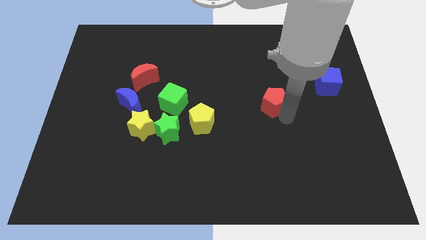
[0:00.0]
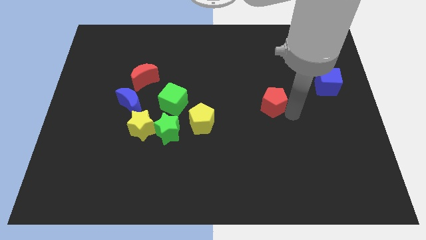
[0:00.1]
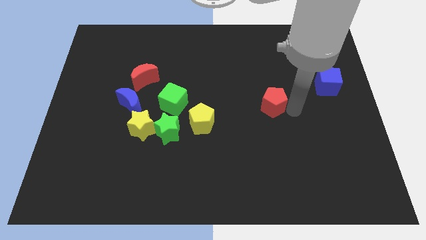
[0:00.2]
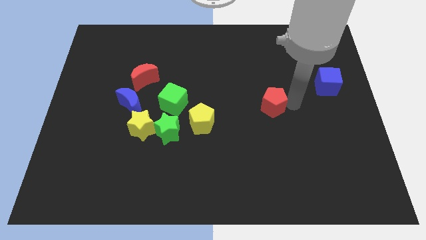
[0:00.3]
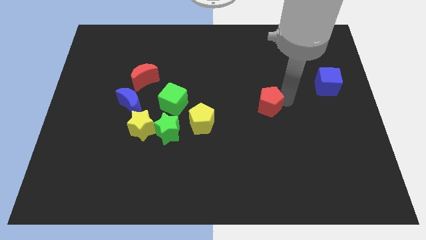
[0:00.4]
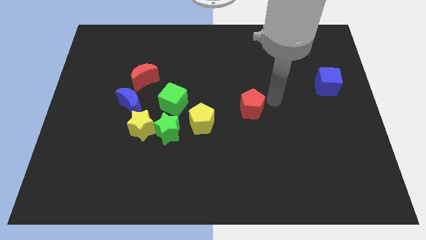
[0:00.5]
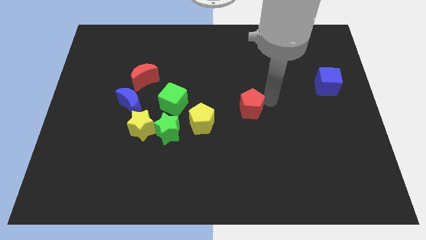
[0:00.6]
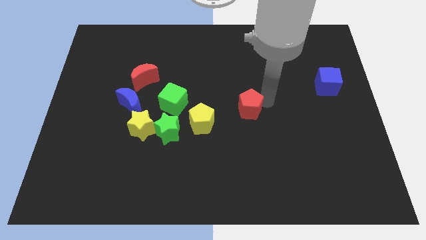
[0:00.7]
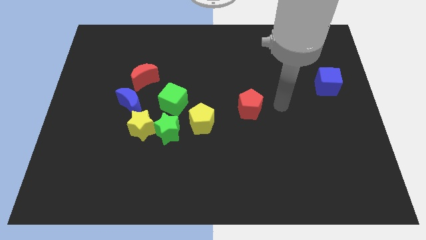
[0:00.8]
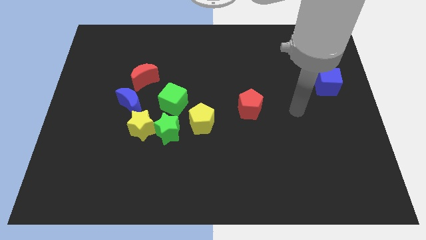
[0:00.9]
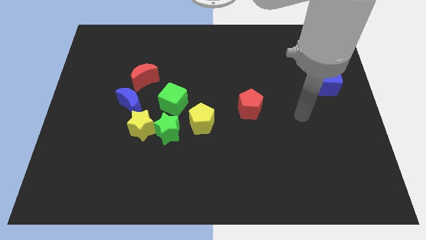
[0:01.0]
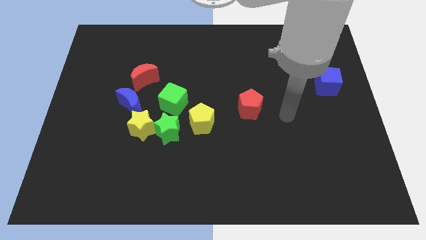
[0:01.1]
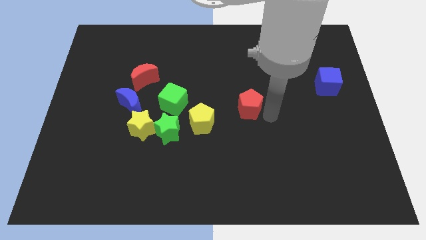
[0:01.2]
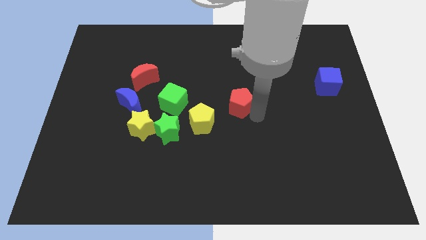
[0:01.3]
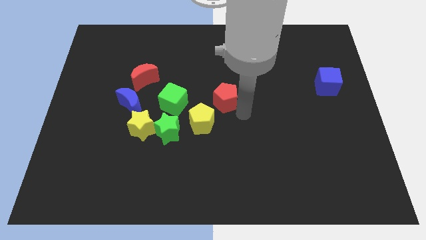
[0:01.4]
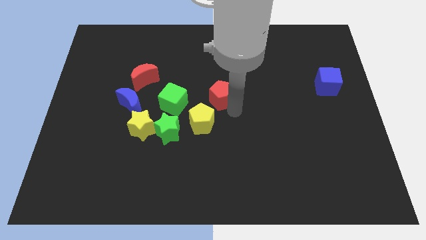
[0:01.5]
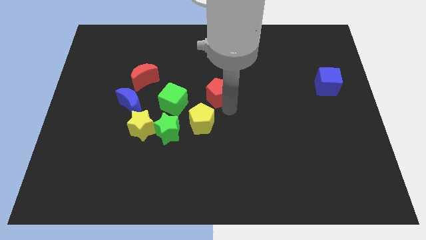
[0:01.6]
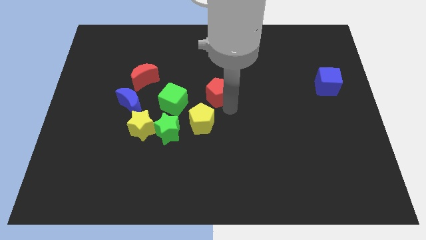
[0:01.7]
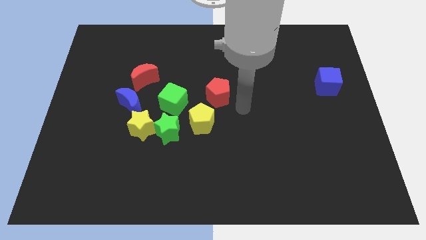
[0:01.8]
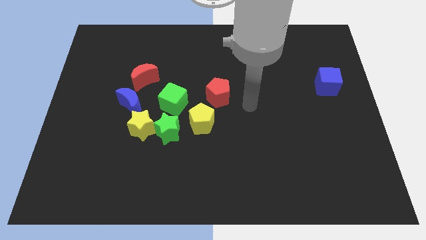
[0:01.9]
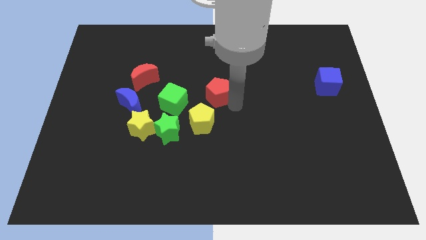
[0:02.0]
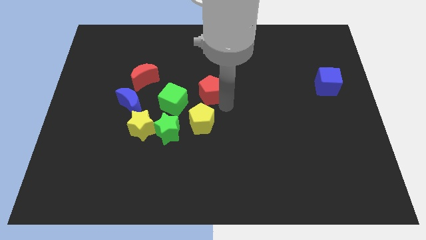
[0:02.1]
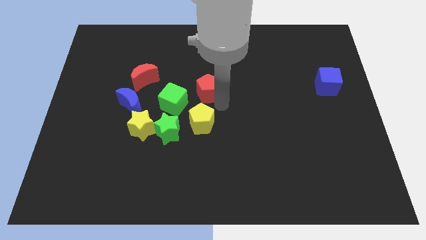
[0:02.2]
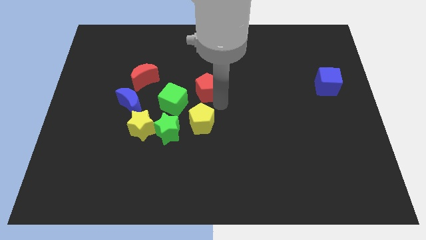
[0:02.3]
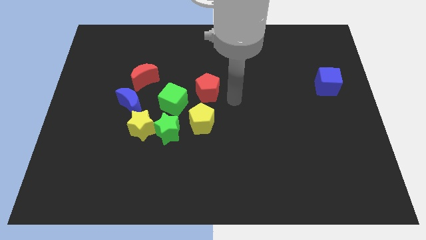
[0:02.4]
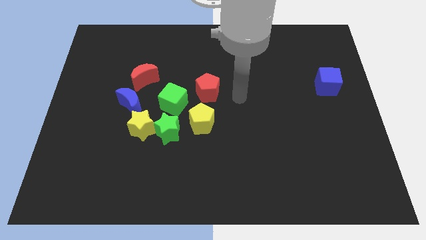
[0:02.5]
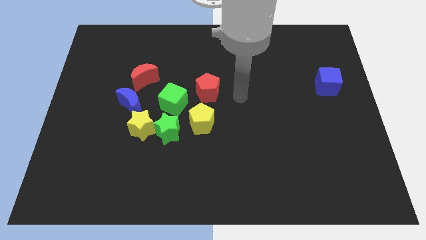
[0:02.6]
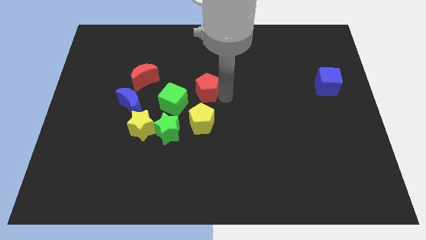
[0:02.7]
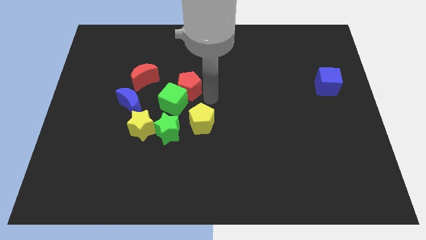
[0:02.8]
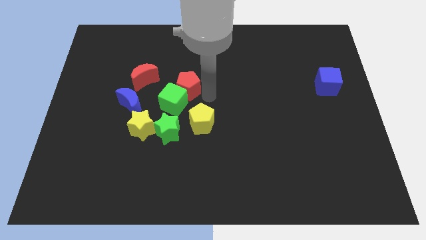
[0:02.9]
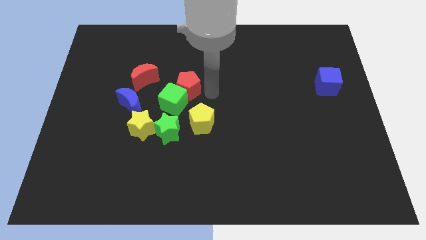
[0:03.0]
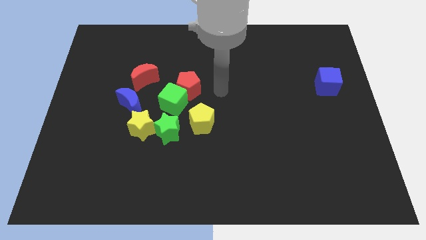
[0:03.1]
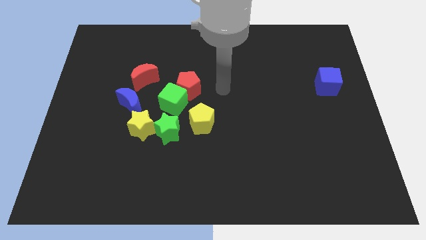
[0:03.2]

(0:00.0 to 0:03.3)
push the red pentagon towards the green cube

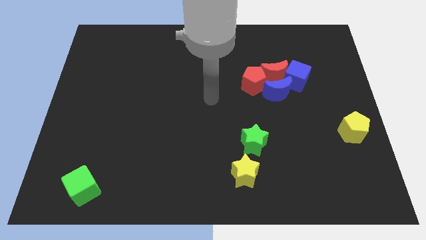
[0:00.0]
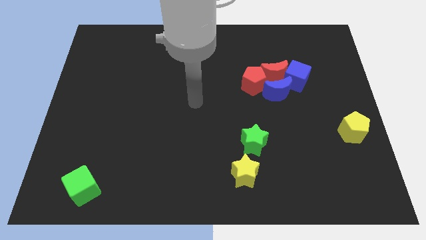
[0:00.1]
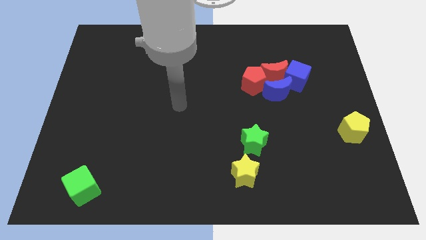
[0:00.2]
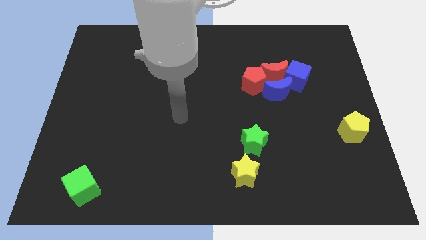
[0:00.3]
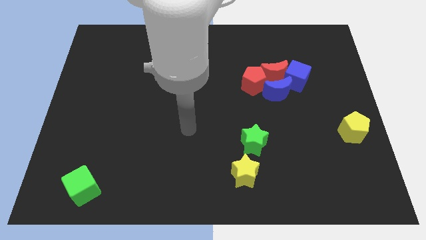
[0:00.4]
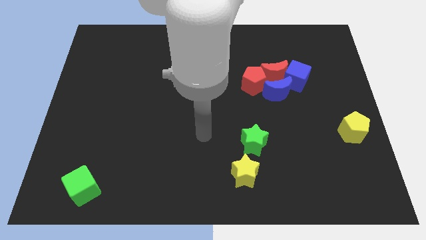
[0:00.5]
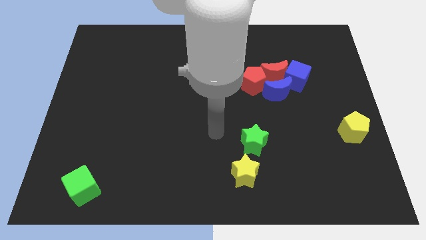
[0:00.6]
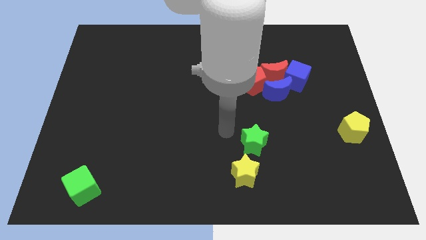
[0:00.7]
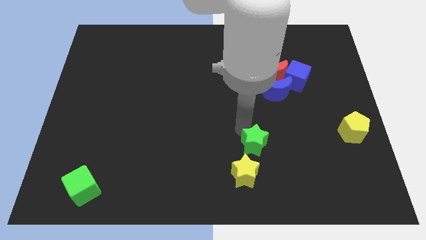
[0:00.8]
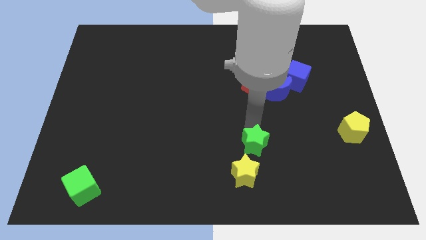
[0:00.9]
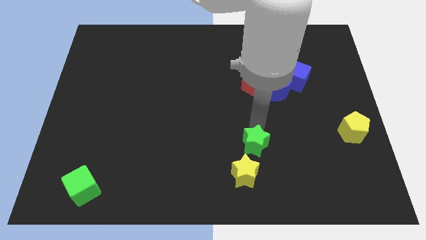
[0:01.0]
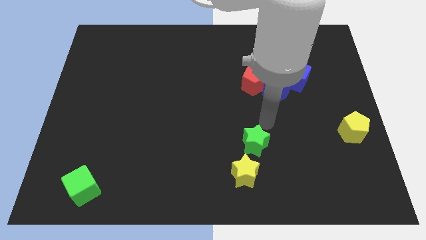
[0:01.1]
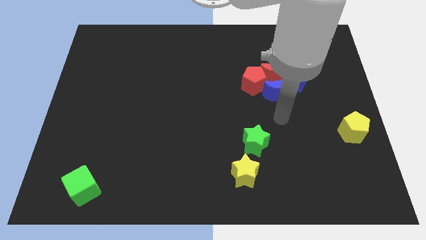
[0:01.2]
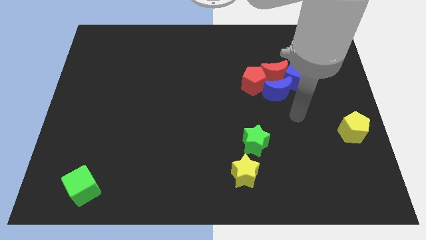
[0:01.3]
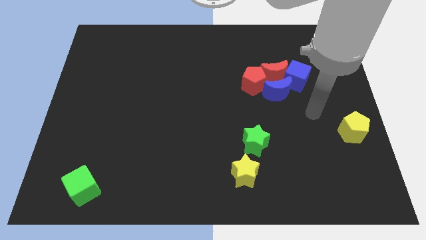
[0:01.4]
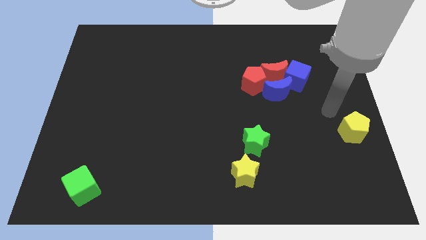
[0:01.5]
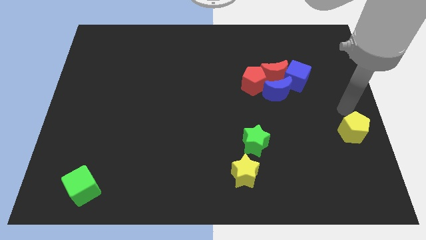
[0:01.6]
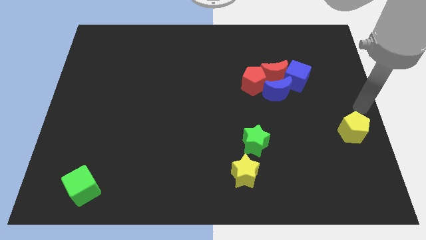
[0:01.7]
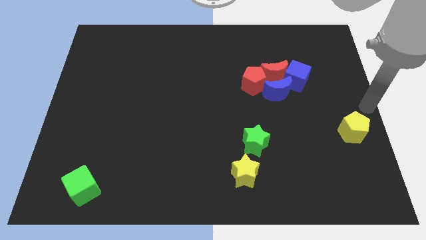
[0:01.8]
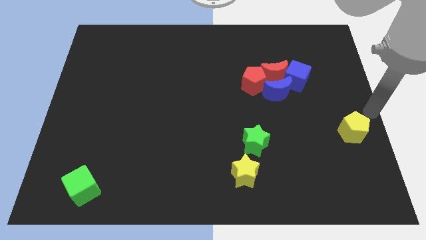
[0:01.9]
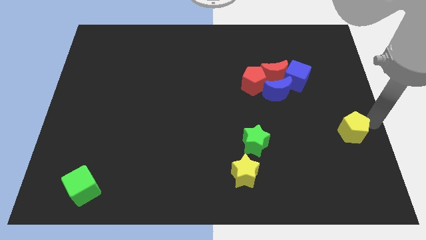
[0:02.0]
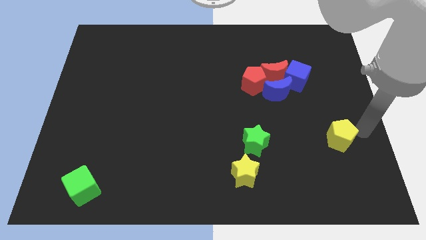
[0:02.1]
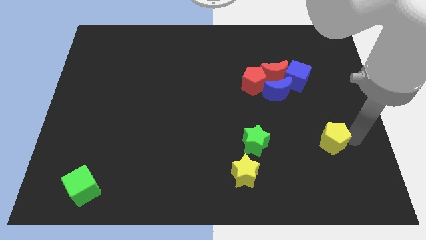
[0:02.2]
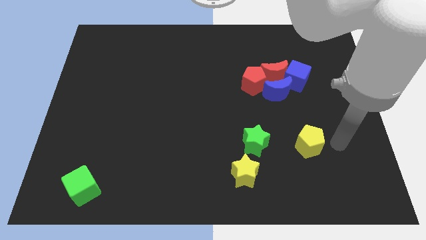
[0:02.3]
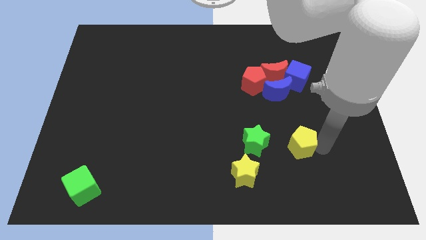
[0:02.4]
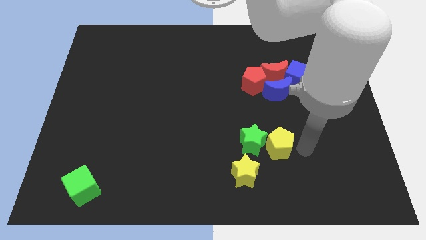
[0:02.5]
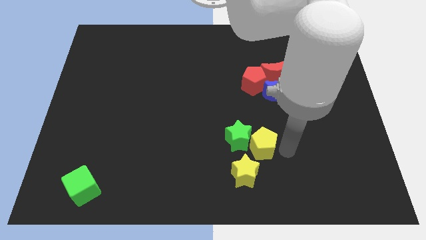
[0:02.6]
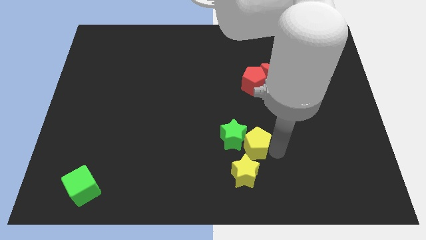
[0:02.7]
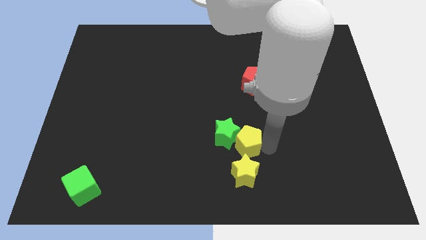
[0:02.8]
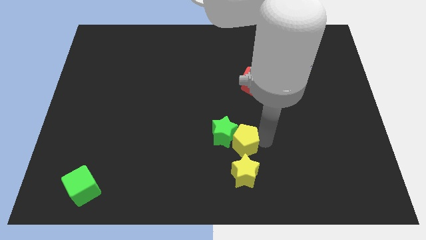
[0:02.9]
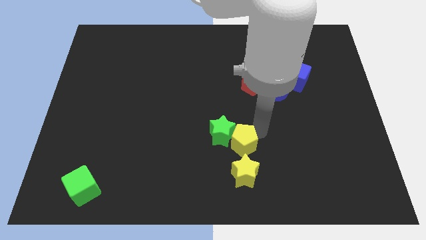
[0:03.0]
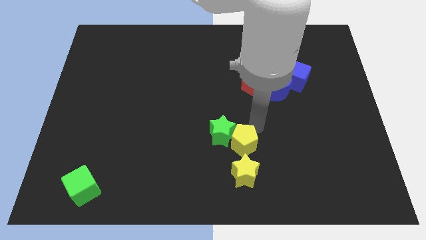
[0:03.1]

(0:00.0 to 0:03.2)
push the green star and yellow pentagon towards the left side of the board

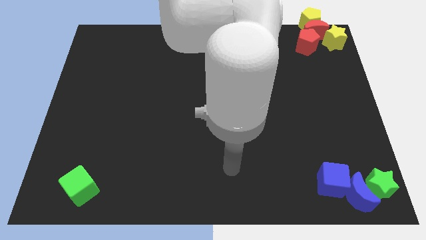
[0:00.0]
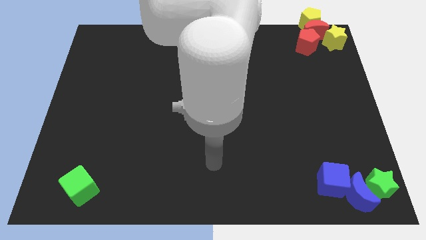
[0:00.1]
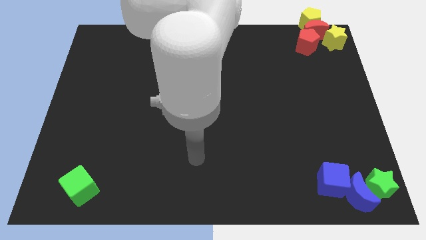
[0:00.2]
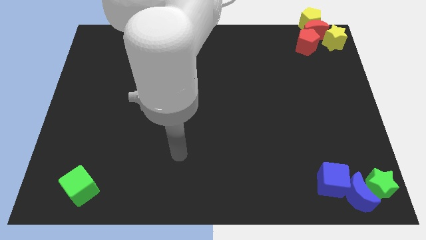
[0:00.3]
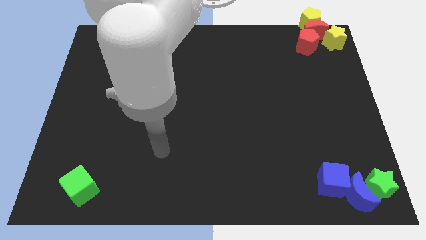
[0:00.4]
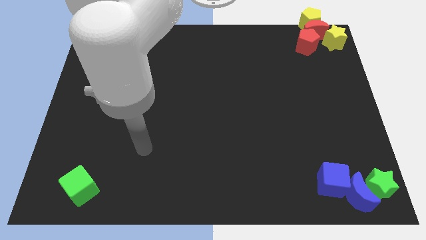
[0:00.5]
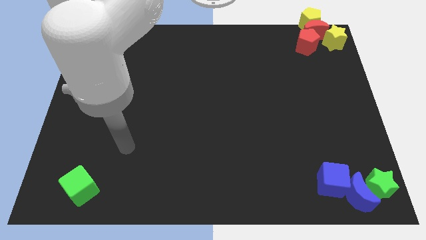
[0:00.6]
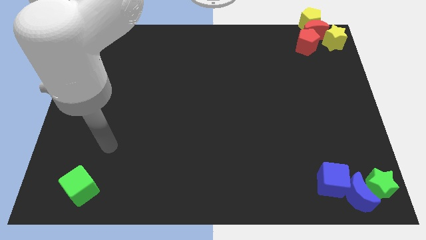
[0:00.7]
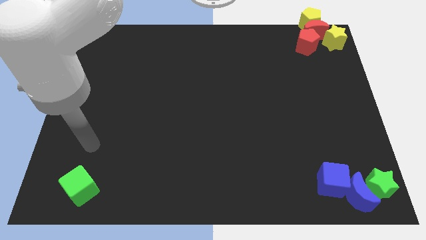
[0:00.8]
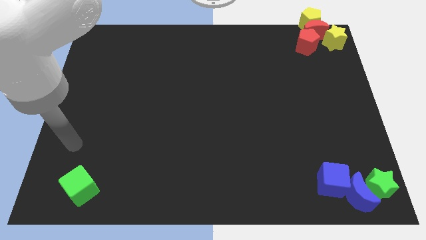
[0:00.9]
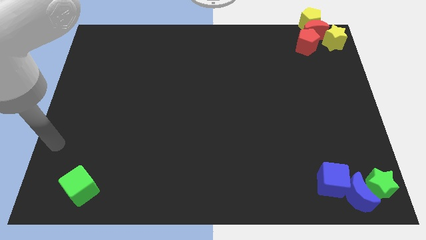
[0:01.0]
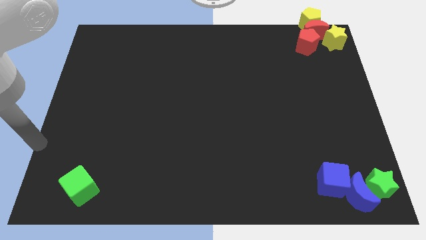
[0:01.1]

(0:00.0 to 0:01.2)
place your arm at left side of the board

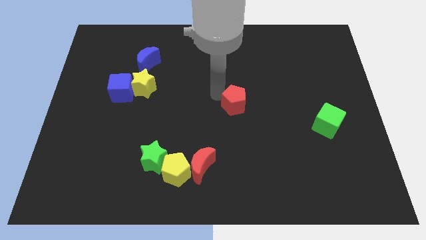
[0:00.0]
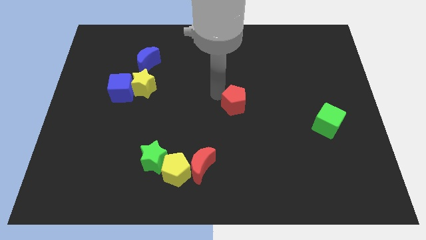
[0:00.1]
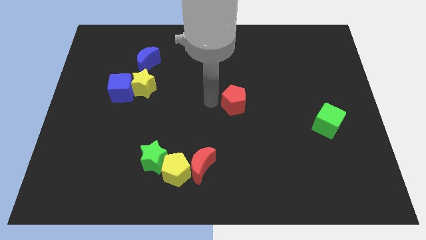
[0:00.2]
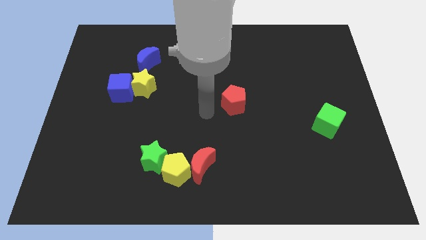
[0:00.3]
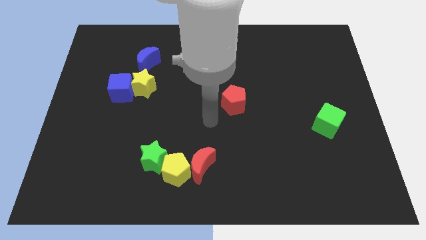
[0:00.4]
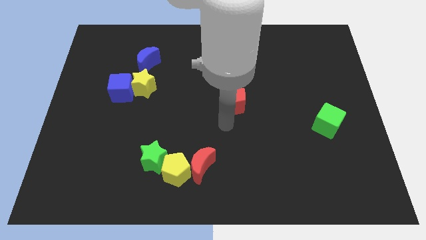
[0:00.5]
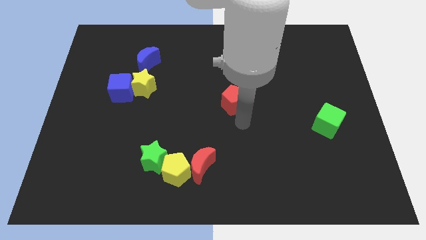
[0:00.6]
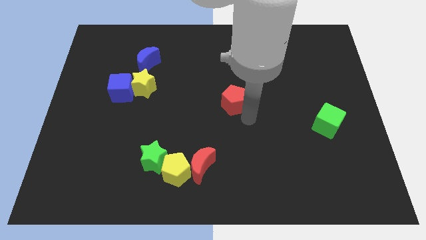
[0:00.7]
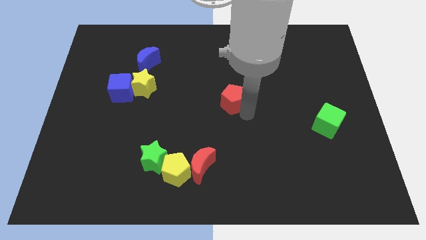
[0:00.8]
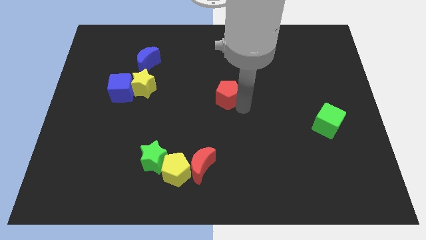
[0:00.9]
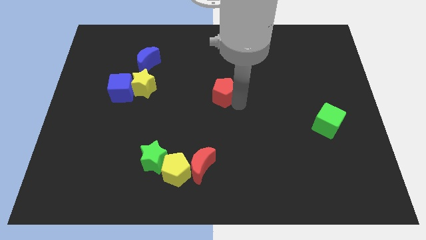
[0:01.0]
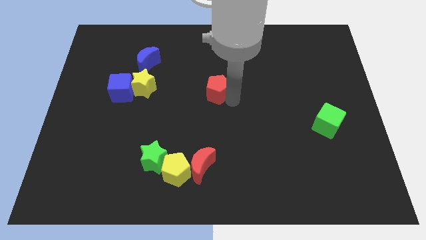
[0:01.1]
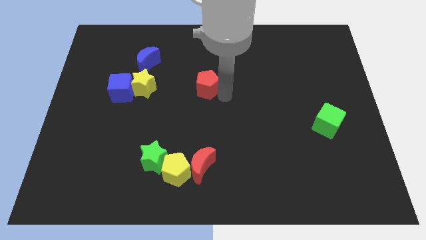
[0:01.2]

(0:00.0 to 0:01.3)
place red pentagon to the right of yellow star
